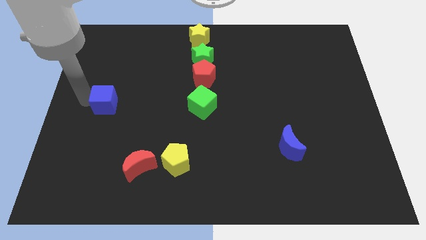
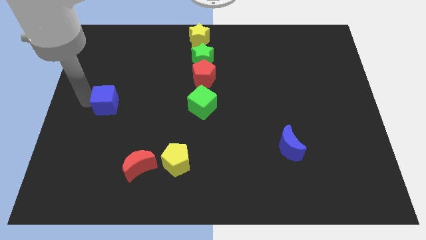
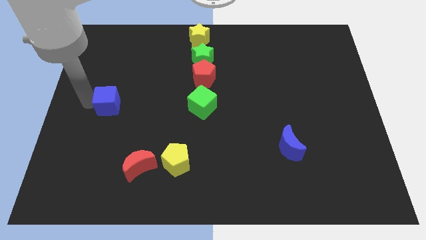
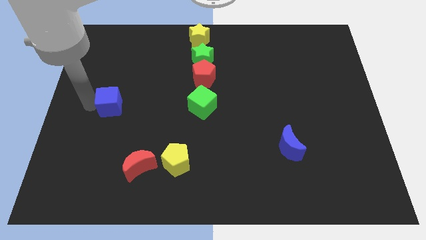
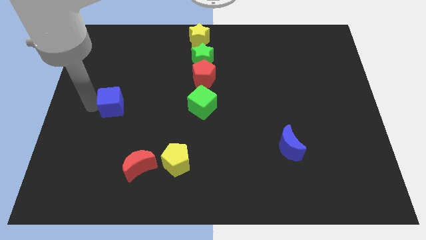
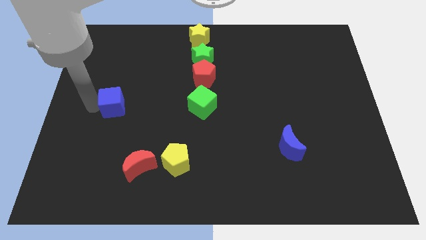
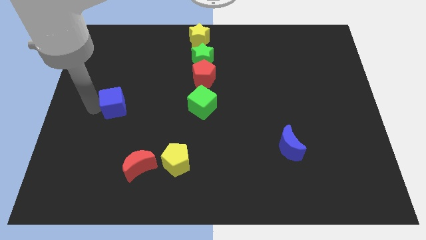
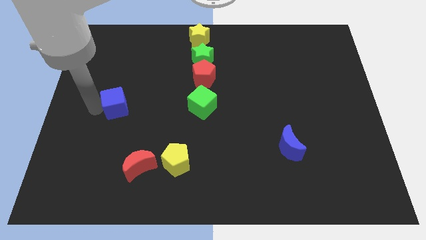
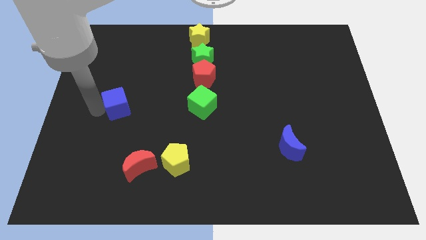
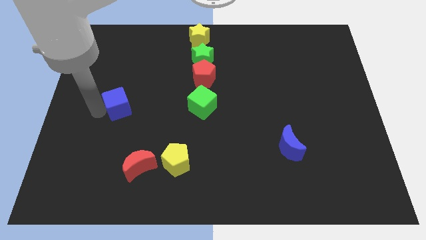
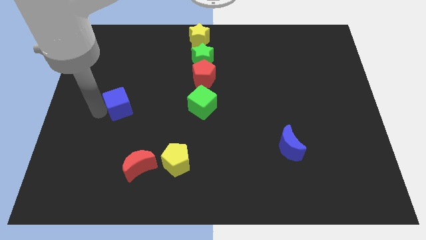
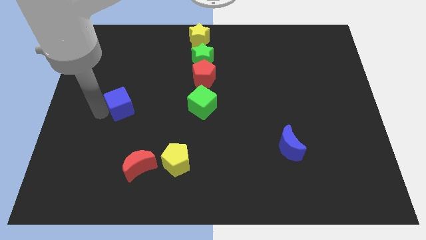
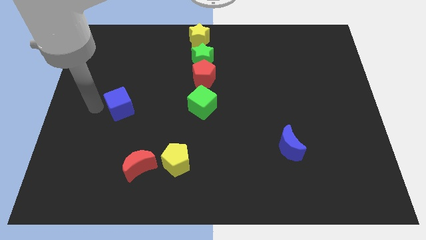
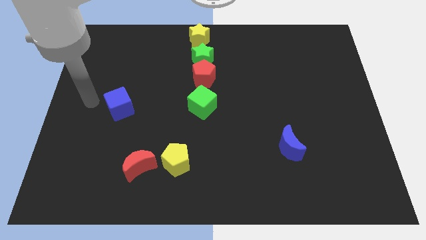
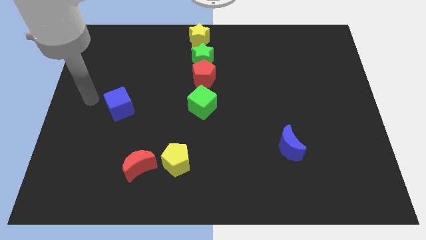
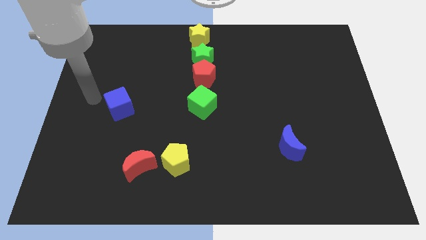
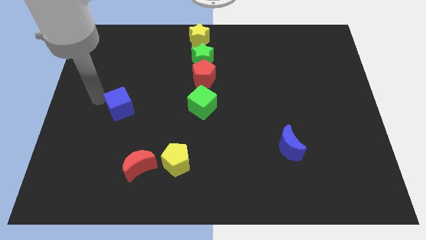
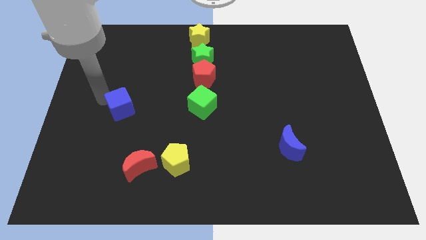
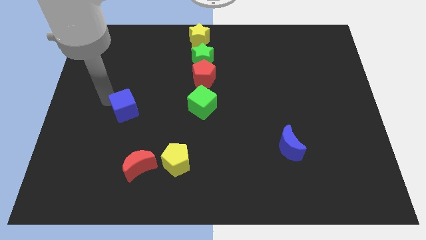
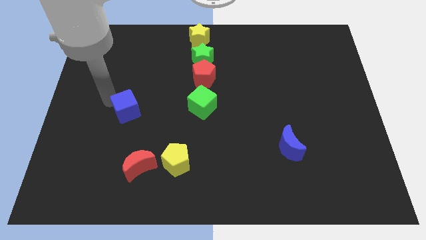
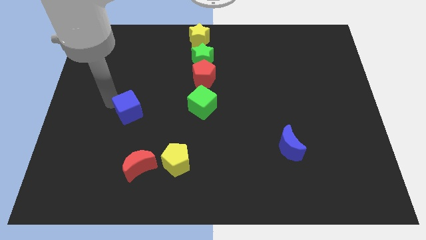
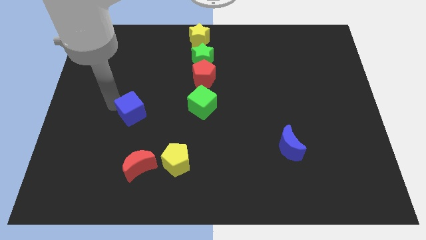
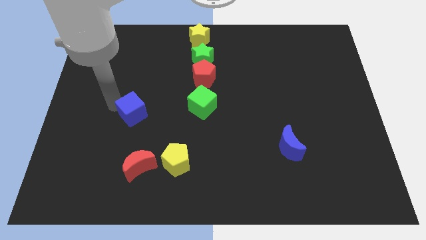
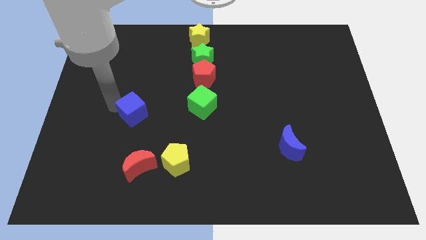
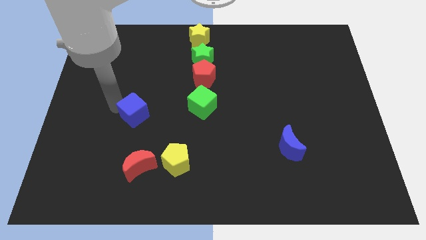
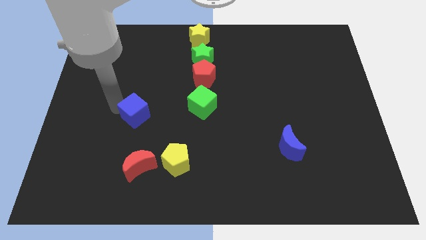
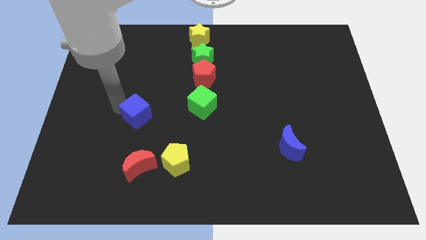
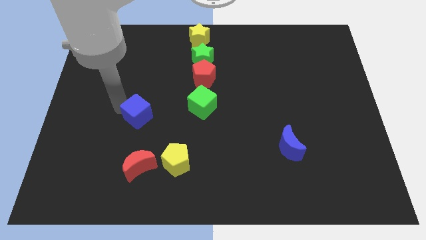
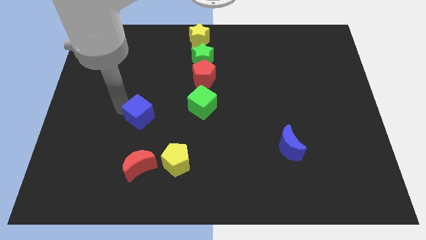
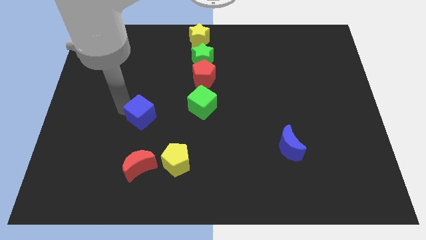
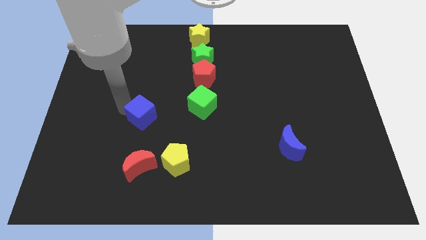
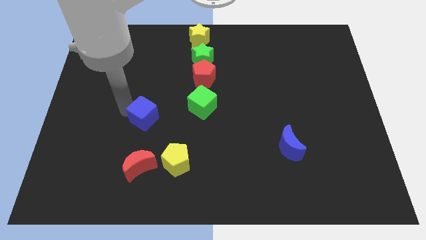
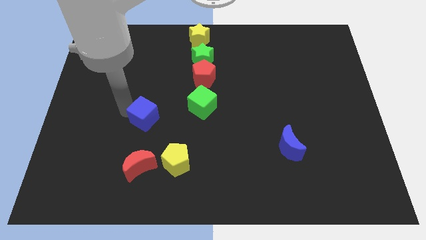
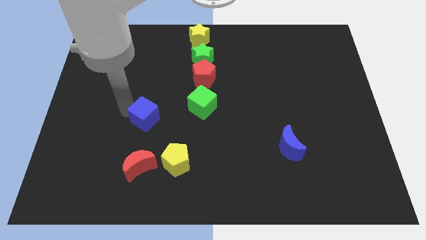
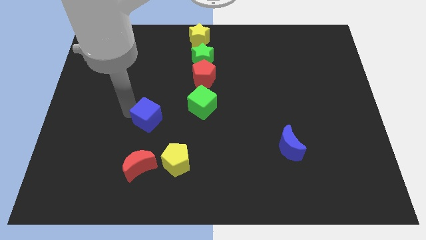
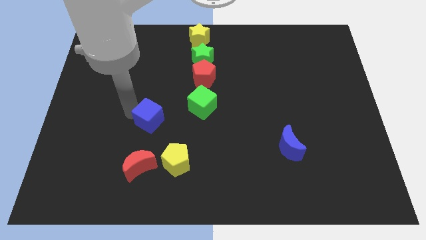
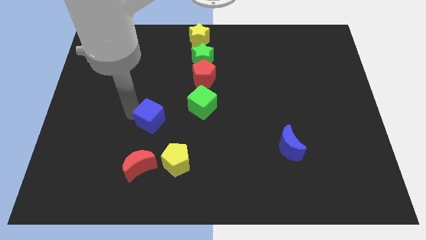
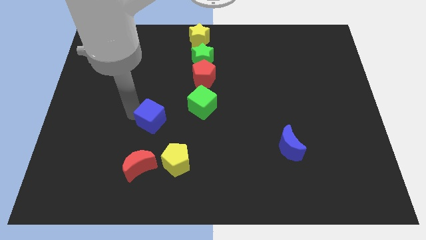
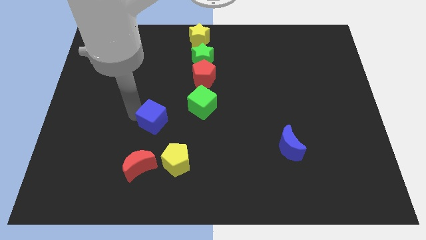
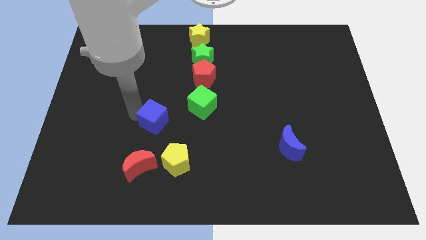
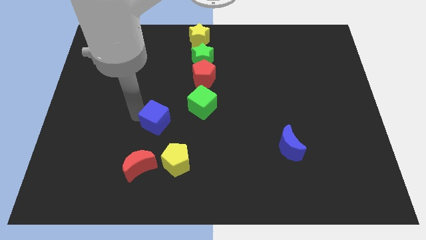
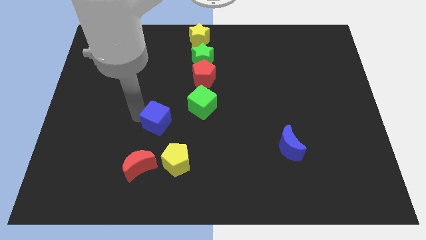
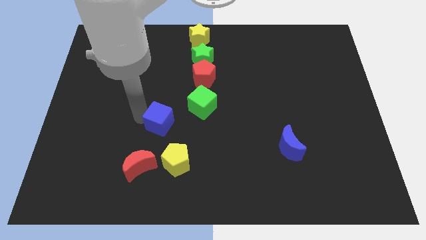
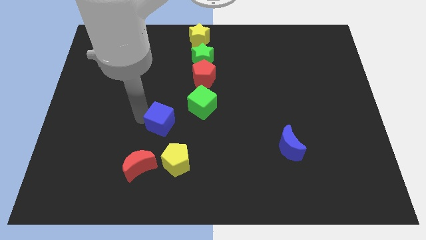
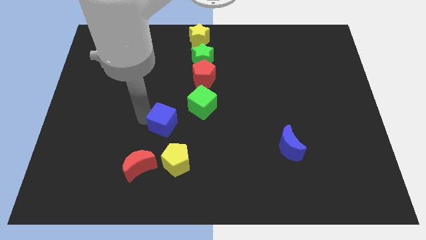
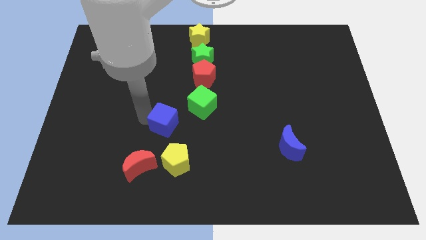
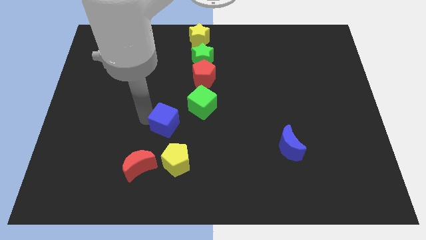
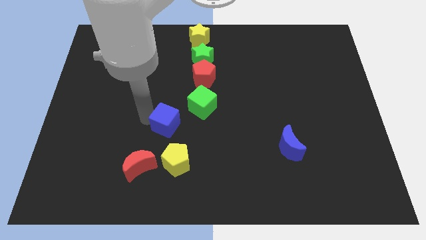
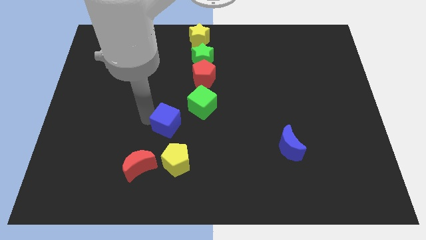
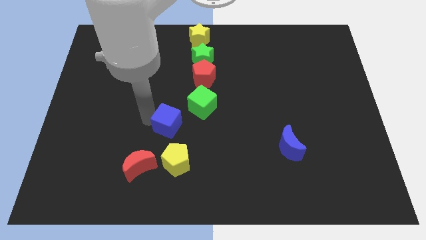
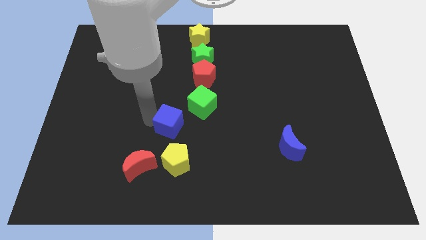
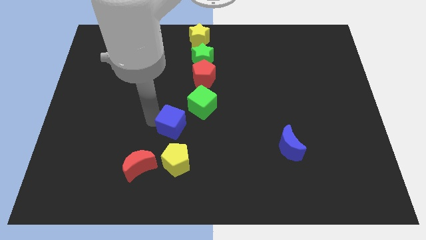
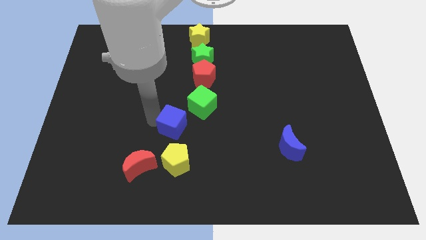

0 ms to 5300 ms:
drag the blue cube to the right

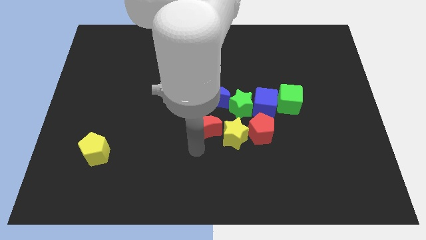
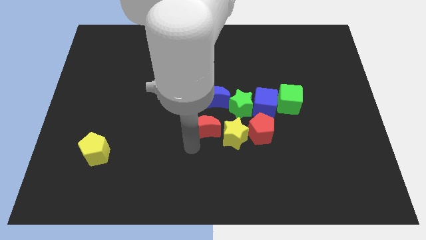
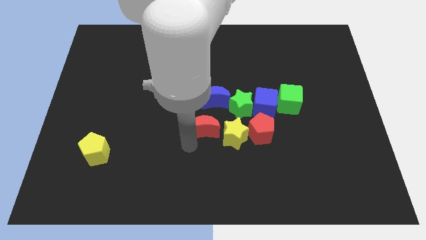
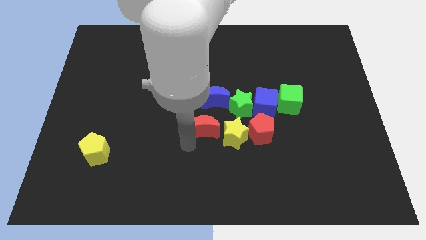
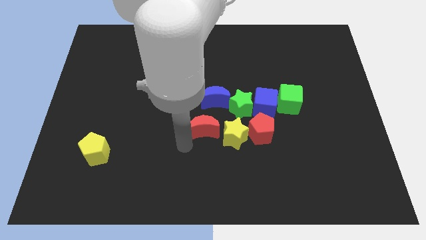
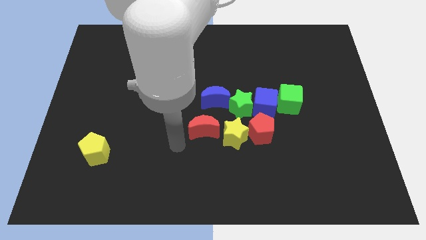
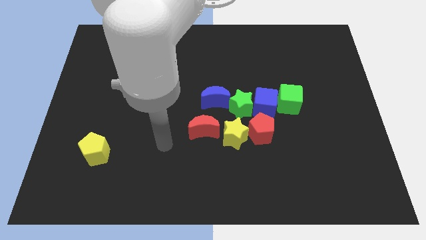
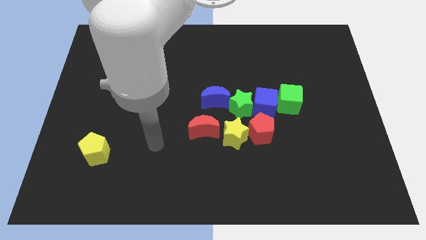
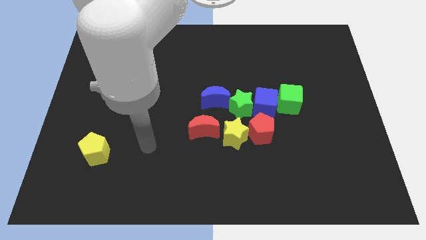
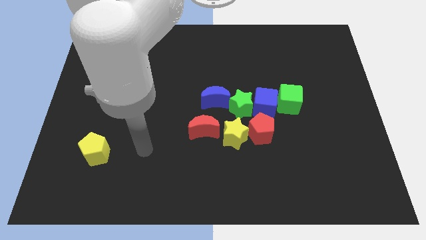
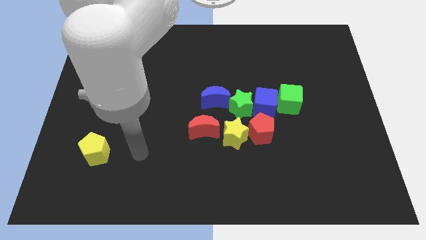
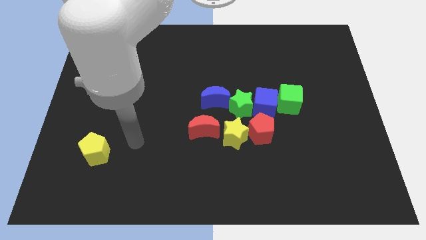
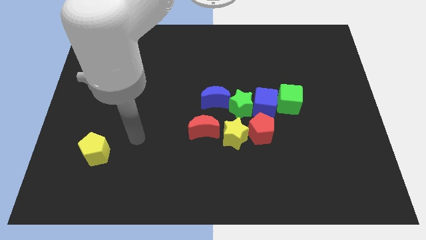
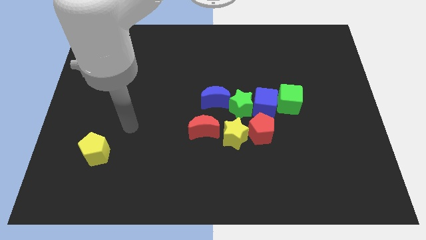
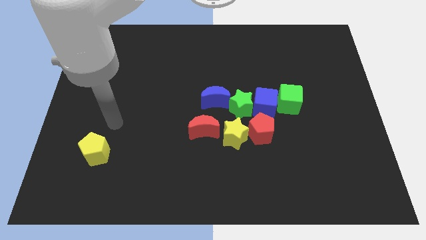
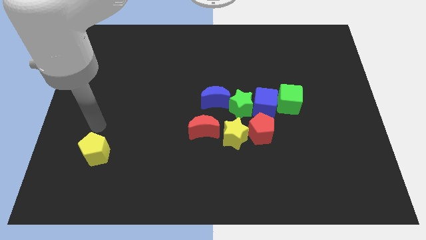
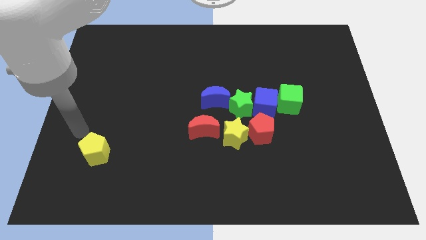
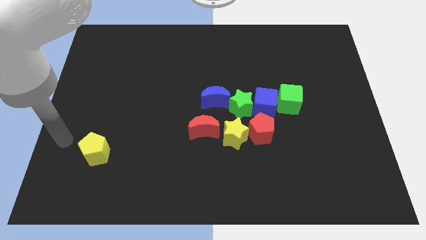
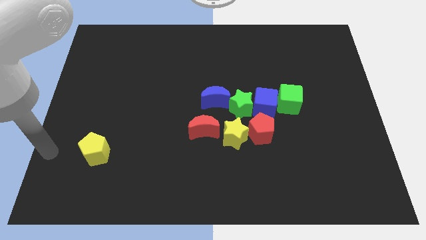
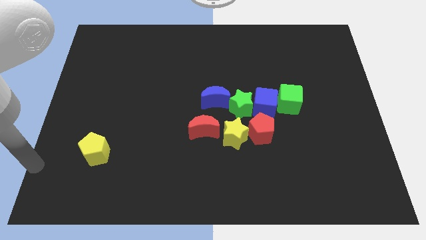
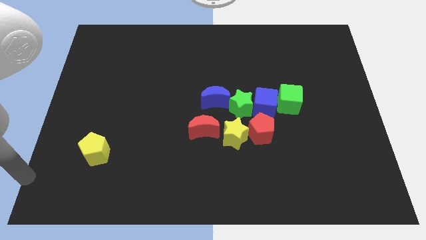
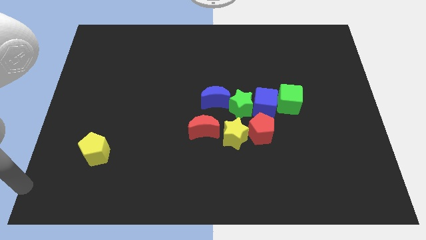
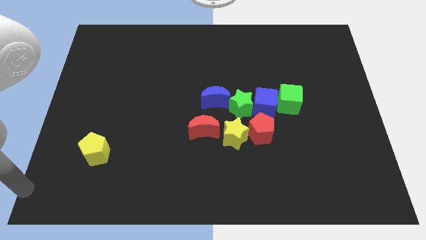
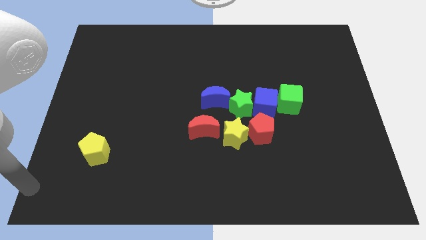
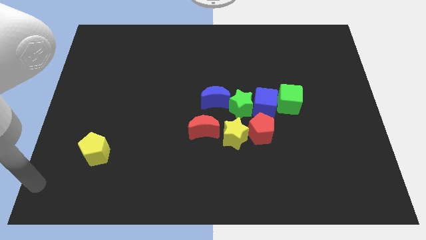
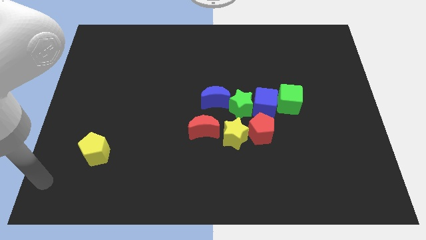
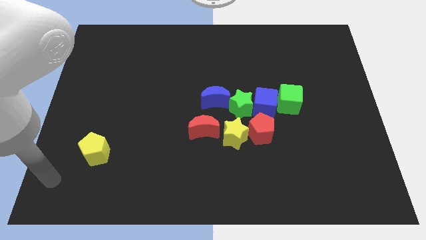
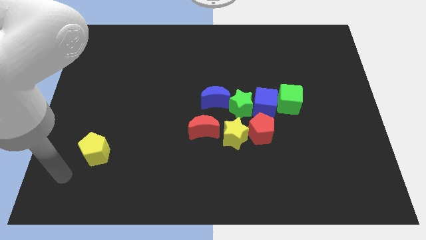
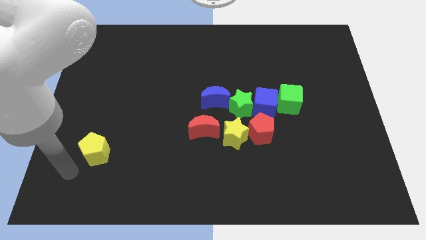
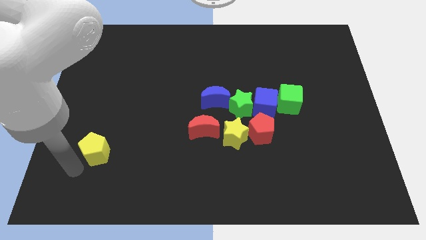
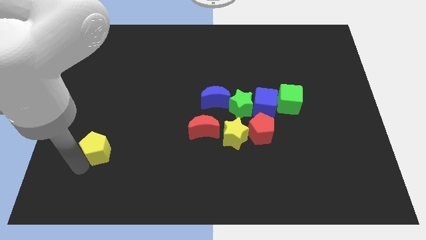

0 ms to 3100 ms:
move your arm to the left of yellow pentagon

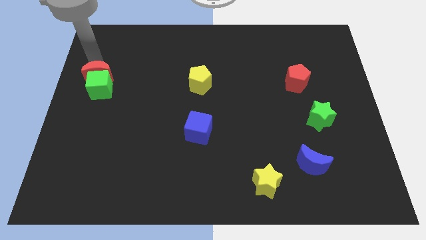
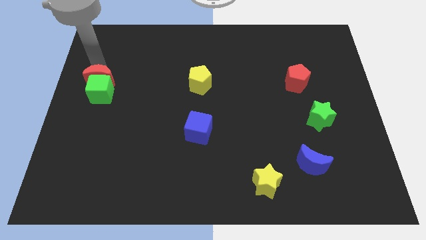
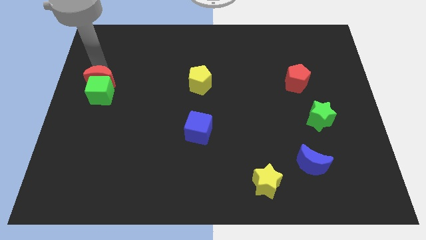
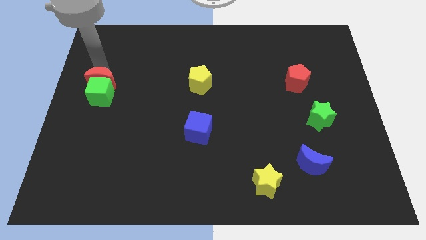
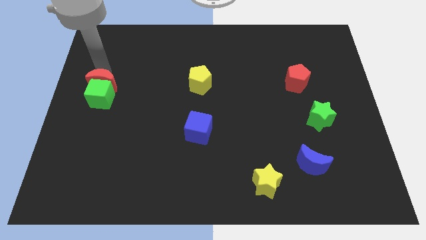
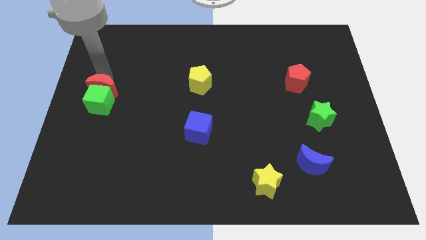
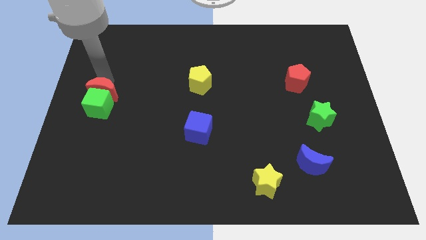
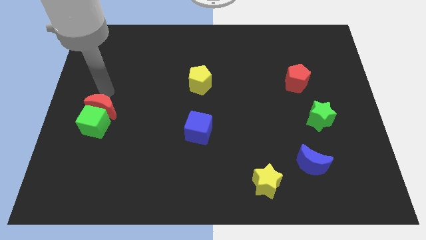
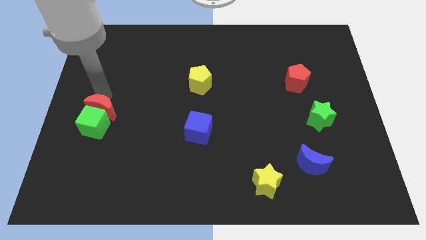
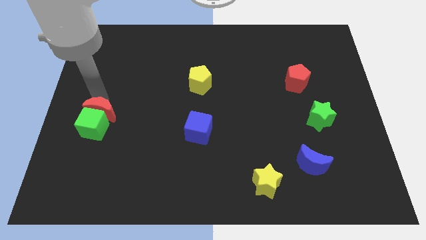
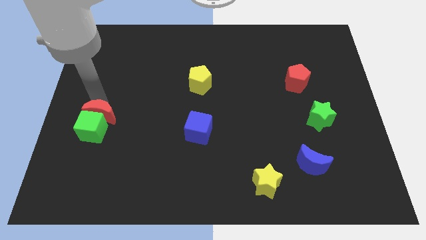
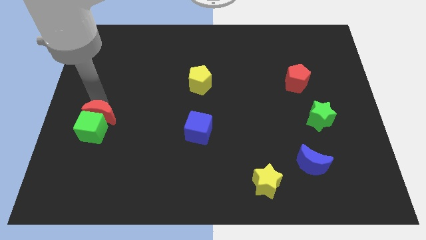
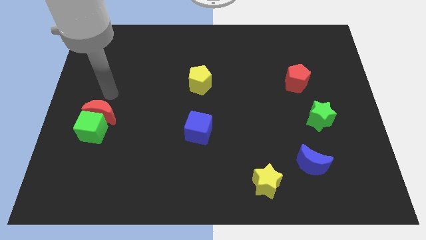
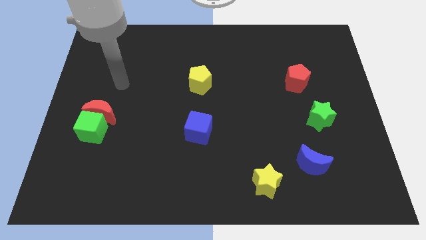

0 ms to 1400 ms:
move the red crescent along with the green cube towards the bottom
